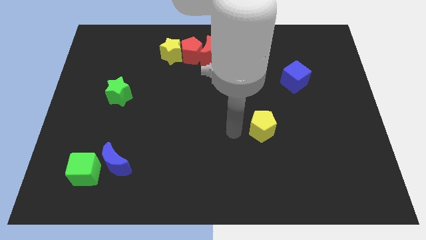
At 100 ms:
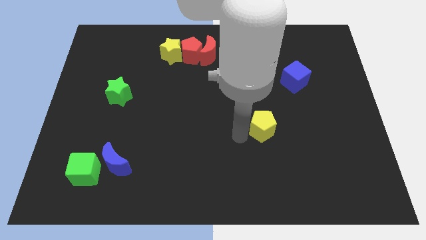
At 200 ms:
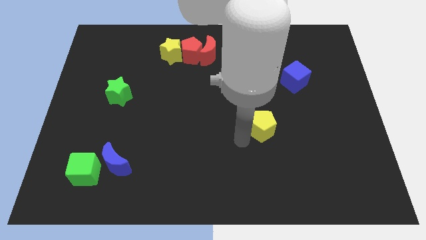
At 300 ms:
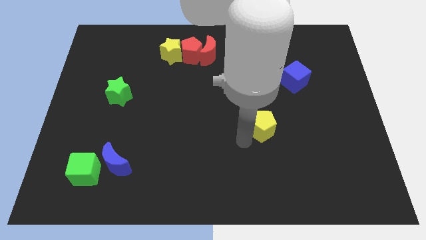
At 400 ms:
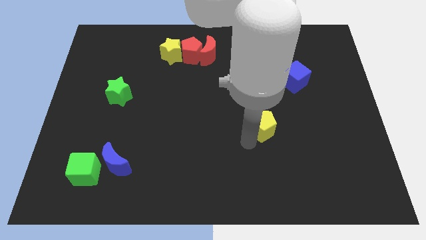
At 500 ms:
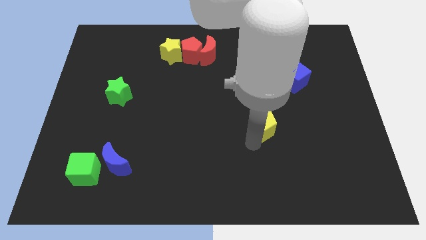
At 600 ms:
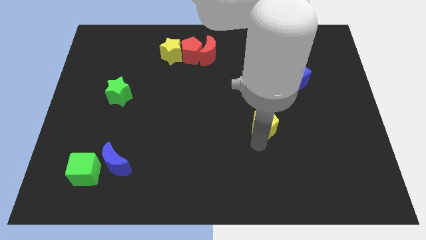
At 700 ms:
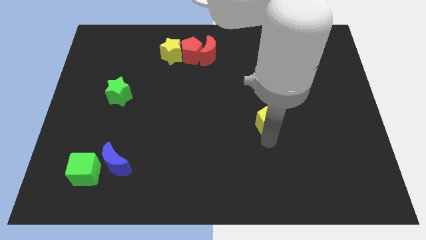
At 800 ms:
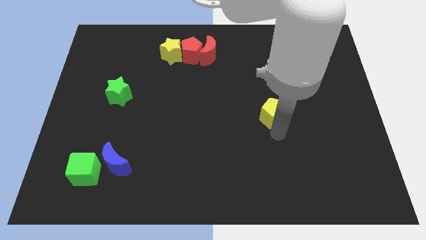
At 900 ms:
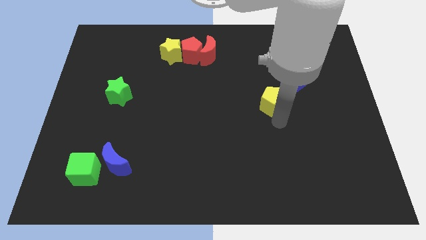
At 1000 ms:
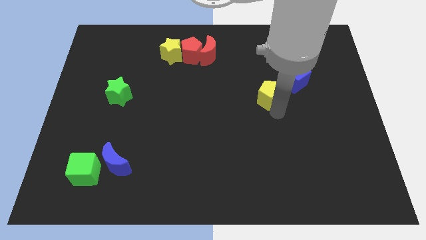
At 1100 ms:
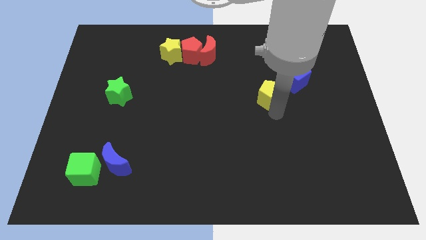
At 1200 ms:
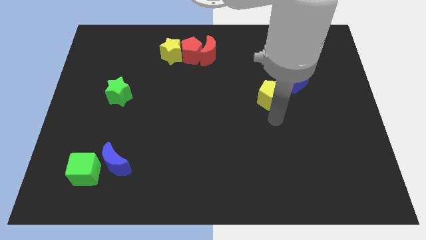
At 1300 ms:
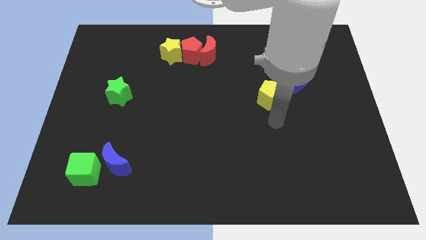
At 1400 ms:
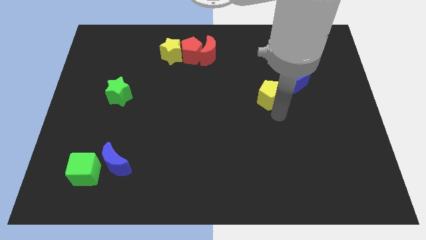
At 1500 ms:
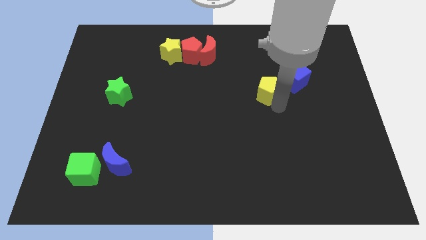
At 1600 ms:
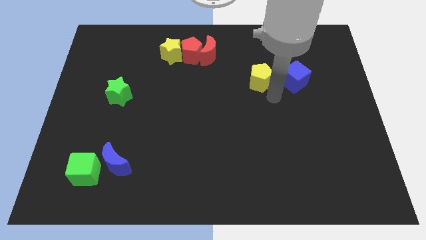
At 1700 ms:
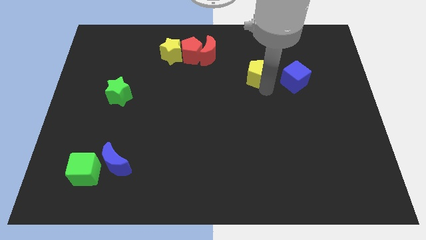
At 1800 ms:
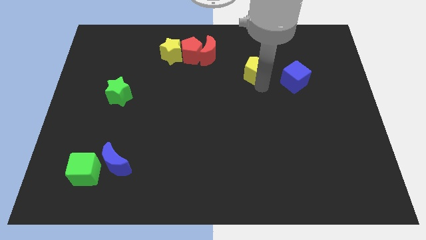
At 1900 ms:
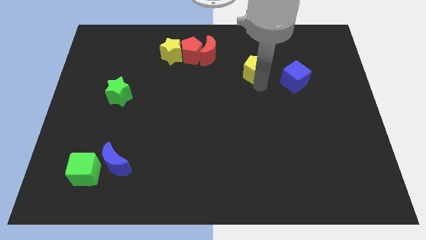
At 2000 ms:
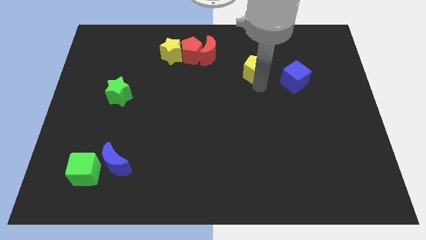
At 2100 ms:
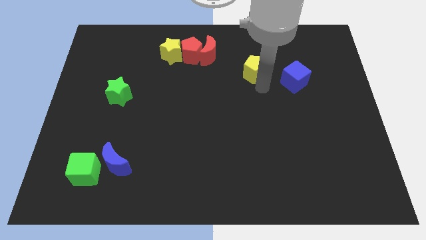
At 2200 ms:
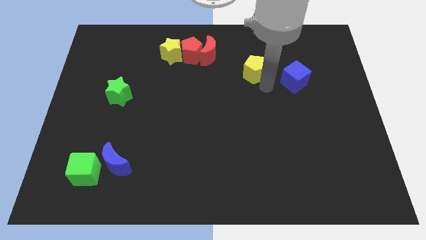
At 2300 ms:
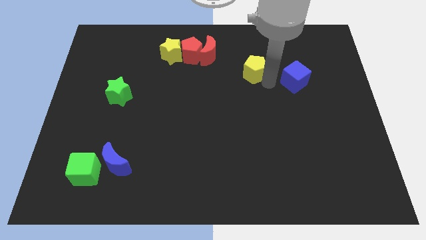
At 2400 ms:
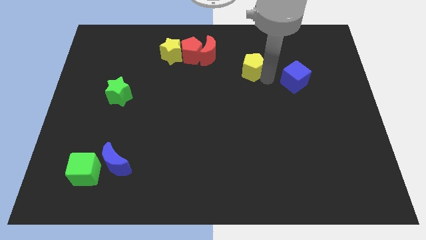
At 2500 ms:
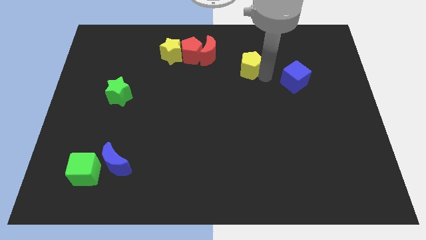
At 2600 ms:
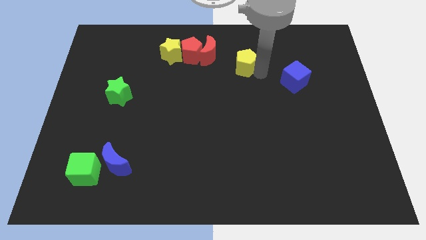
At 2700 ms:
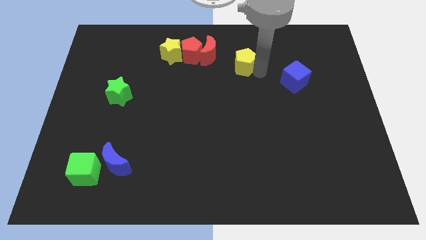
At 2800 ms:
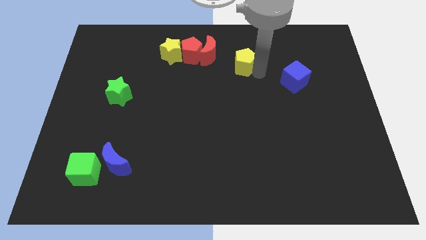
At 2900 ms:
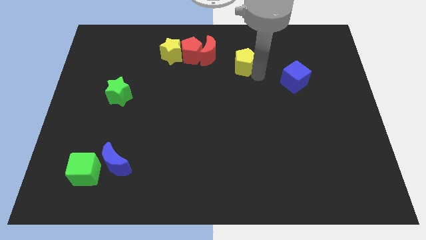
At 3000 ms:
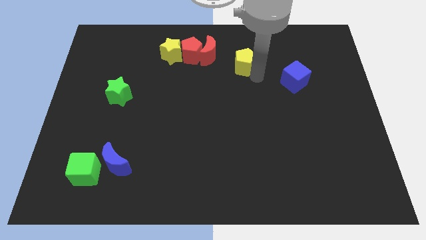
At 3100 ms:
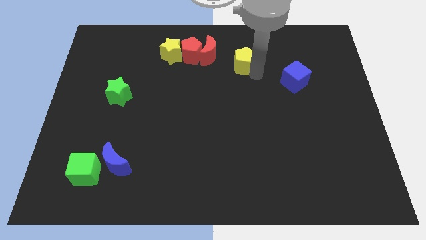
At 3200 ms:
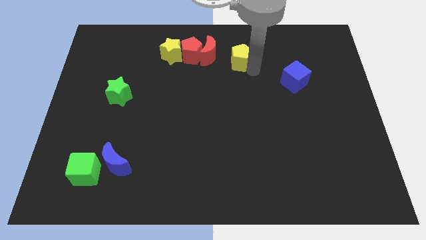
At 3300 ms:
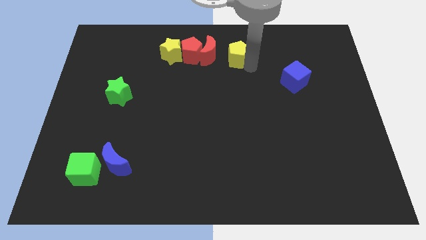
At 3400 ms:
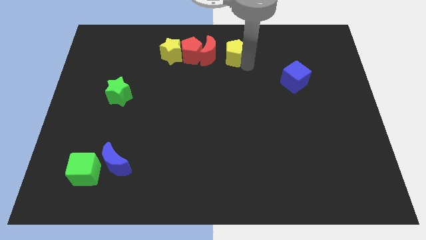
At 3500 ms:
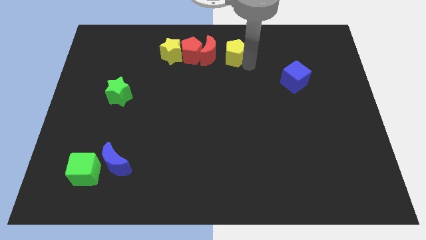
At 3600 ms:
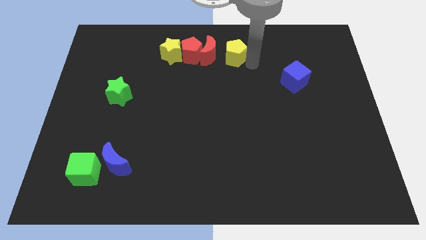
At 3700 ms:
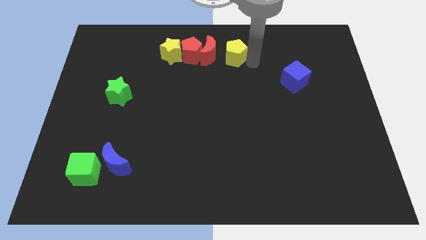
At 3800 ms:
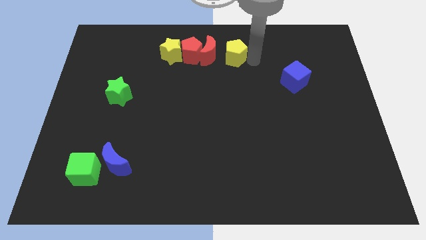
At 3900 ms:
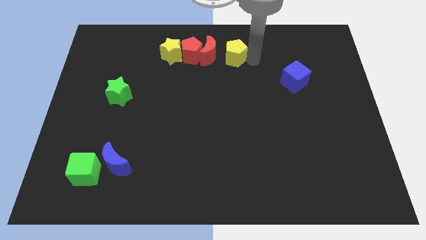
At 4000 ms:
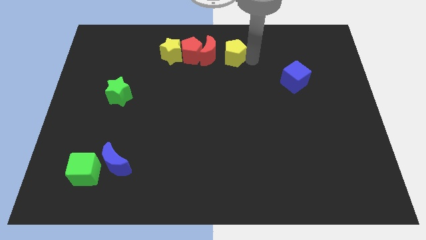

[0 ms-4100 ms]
move yellow pentagon towards red moon

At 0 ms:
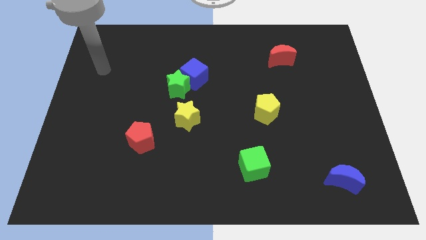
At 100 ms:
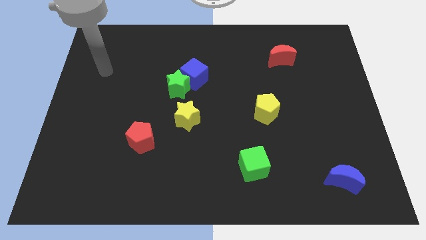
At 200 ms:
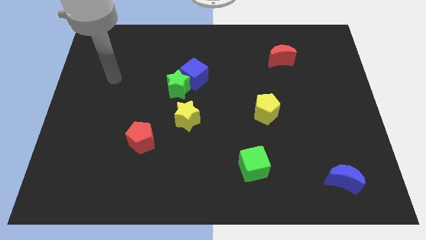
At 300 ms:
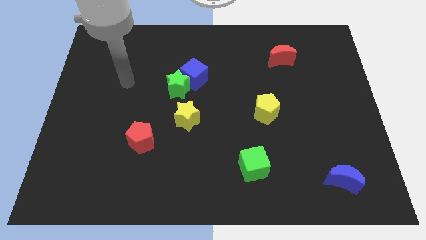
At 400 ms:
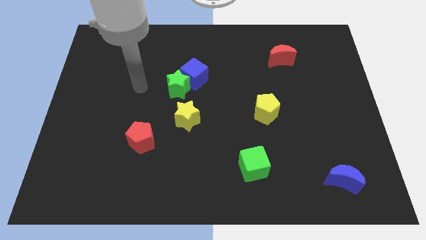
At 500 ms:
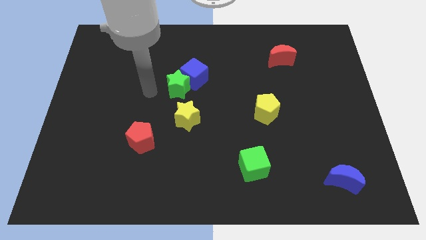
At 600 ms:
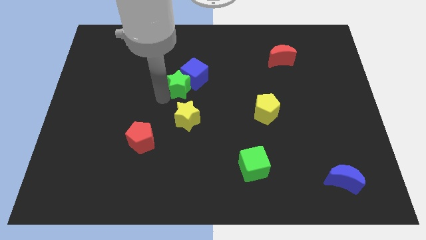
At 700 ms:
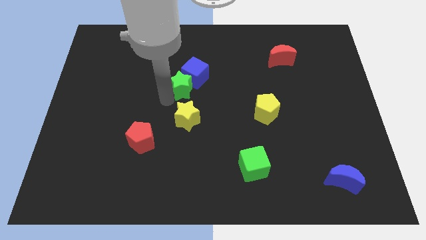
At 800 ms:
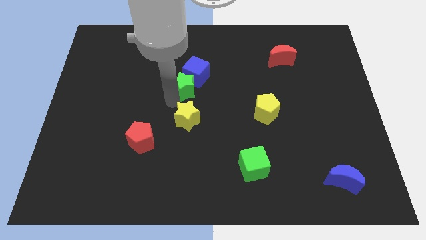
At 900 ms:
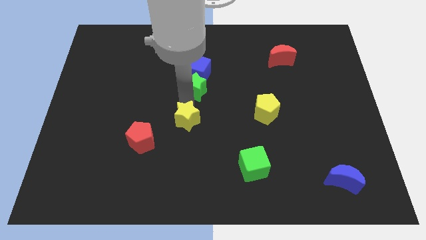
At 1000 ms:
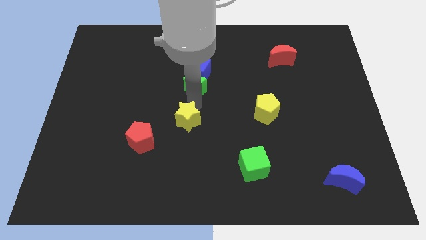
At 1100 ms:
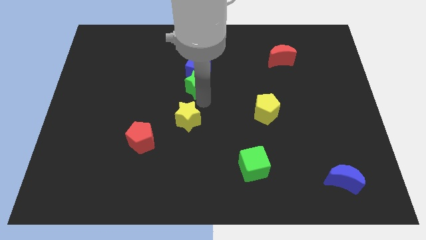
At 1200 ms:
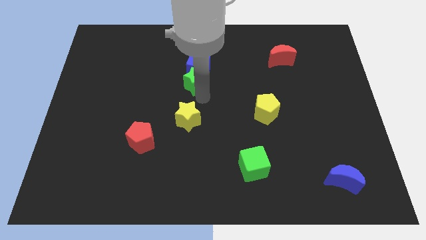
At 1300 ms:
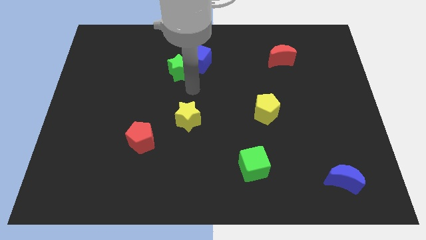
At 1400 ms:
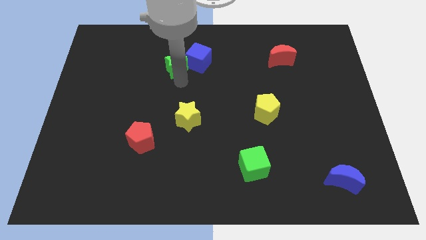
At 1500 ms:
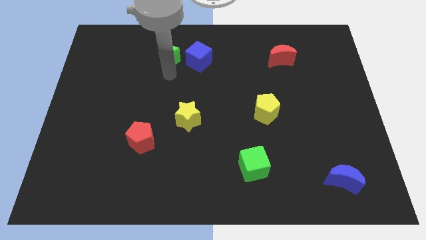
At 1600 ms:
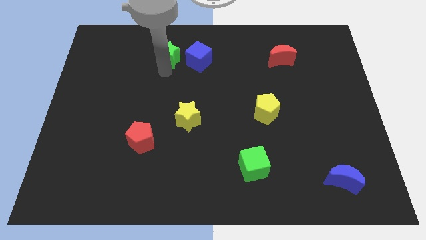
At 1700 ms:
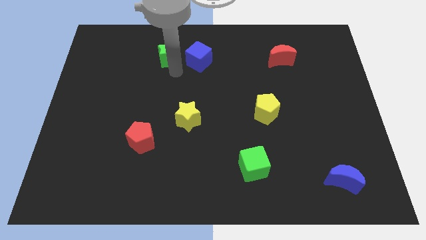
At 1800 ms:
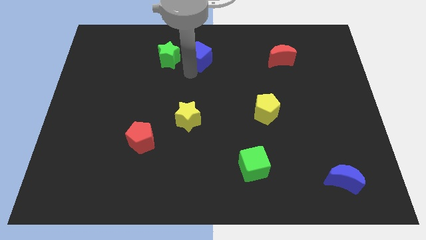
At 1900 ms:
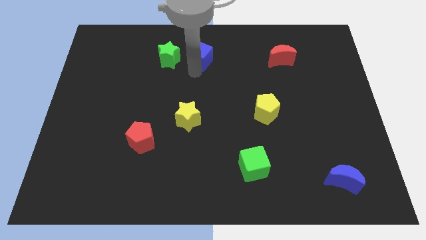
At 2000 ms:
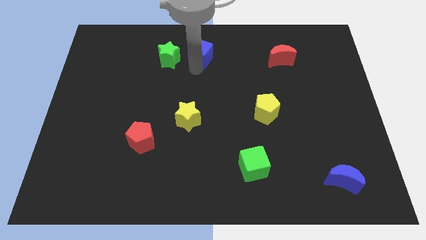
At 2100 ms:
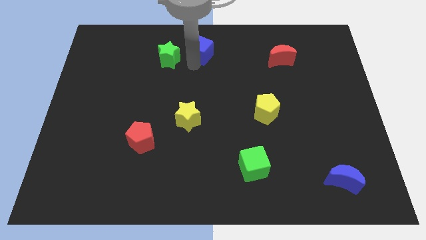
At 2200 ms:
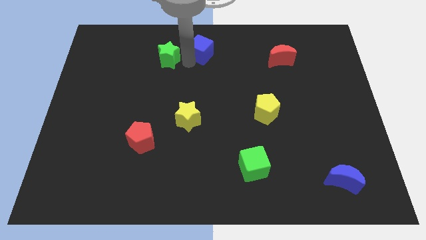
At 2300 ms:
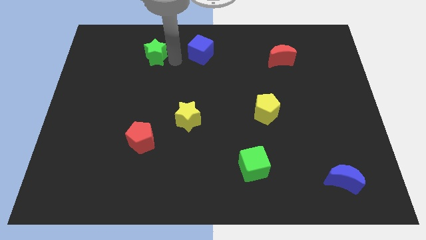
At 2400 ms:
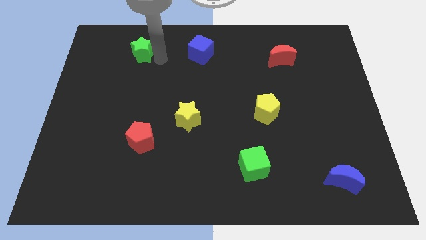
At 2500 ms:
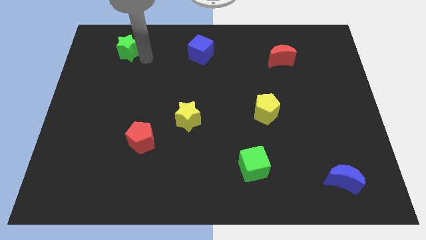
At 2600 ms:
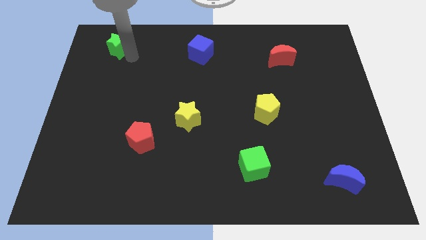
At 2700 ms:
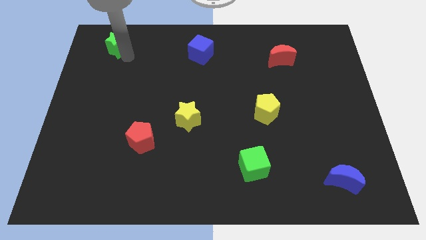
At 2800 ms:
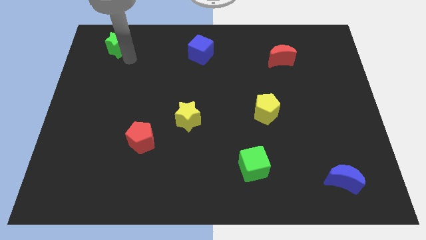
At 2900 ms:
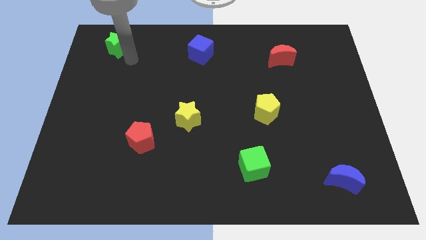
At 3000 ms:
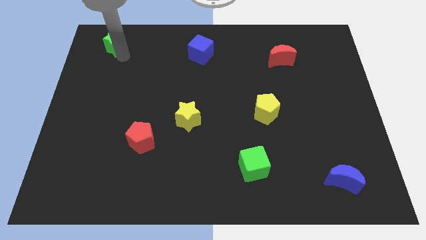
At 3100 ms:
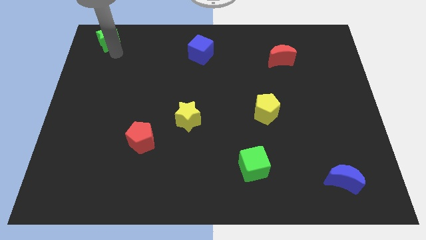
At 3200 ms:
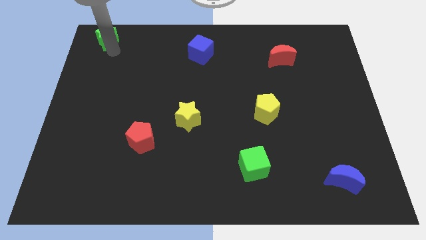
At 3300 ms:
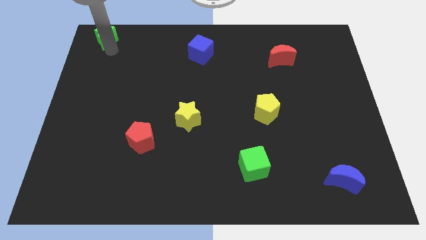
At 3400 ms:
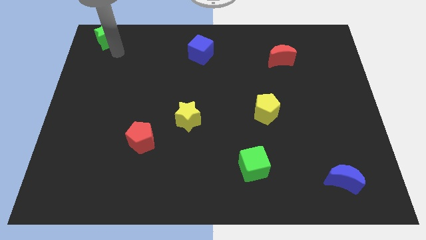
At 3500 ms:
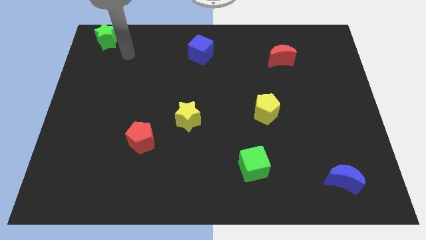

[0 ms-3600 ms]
move the green star to the top left of the board

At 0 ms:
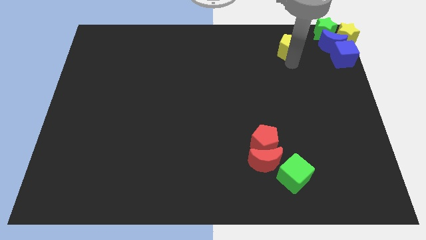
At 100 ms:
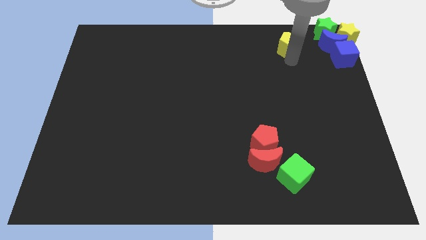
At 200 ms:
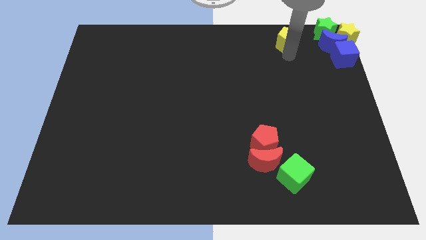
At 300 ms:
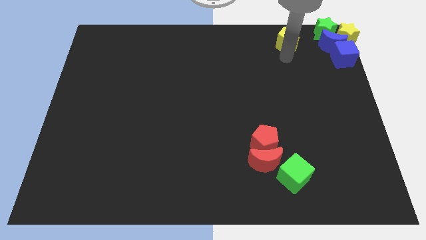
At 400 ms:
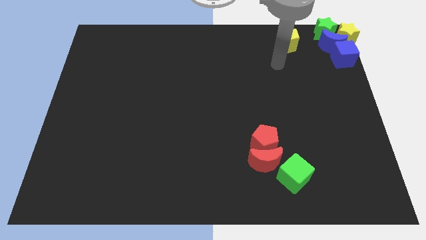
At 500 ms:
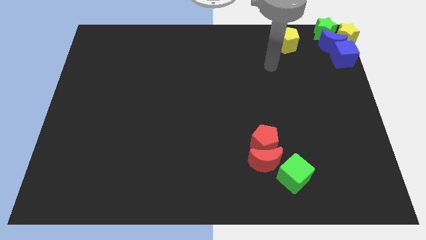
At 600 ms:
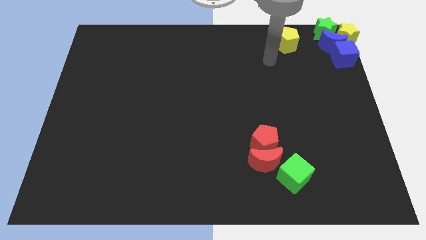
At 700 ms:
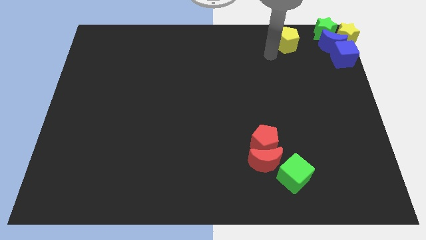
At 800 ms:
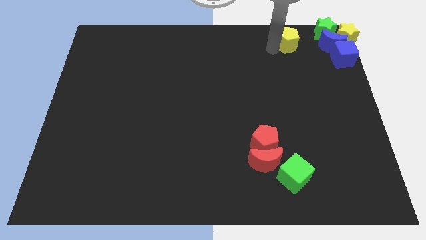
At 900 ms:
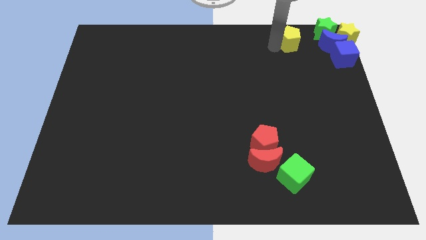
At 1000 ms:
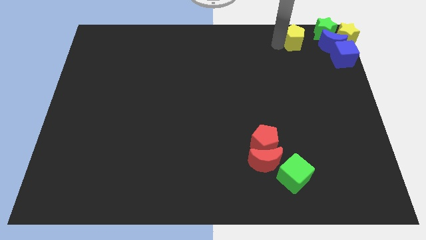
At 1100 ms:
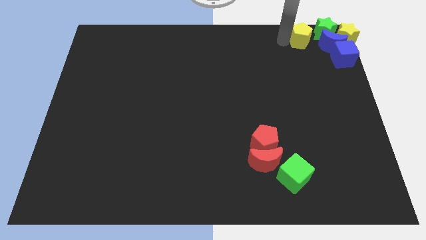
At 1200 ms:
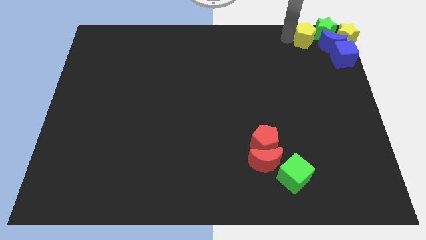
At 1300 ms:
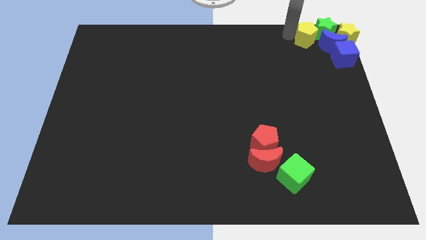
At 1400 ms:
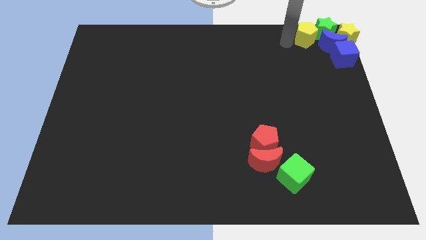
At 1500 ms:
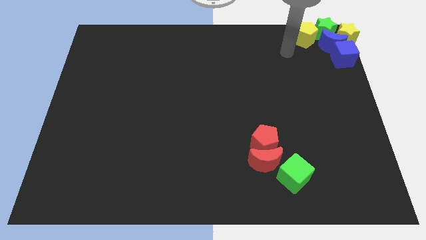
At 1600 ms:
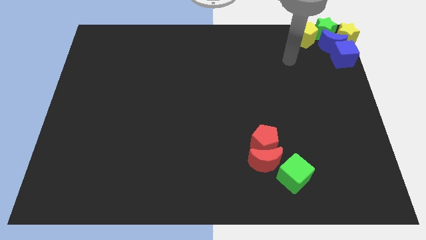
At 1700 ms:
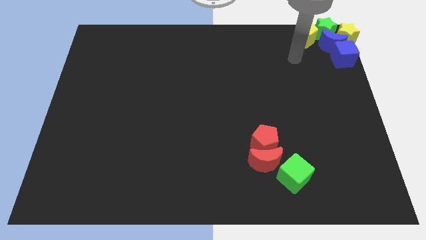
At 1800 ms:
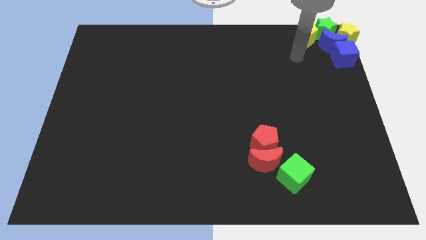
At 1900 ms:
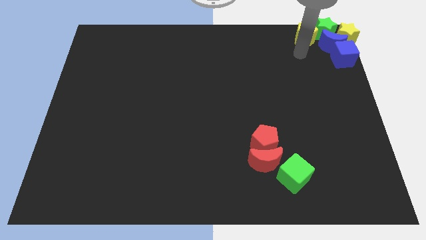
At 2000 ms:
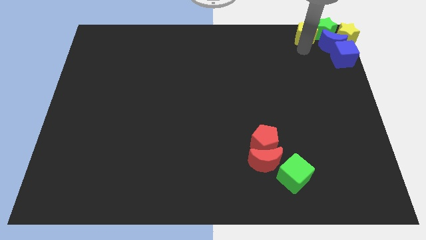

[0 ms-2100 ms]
place yellow pentagon to the left of green star
